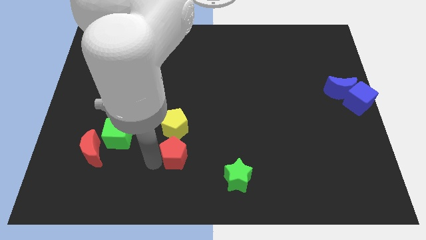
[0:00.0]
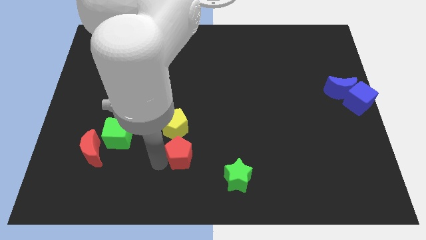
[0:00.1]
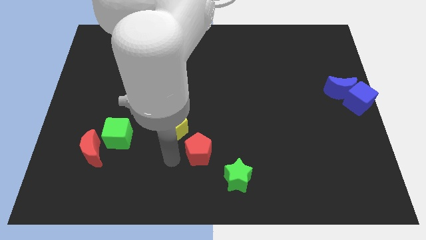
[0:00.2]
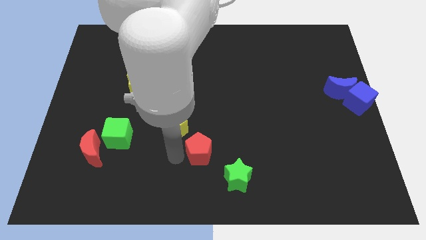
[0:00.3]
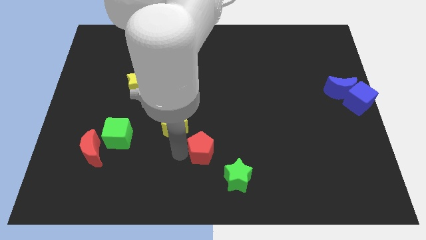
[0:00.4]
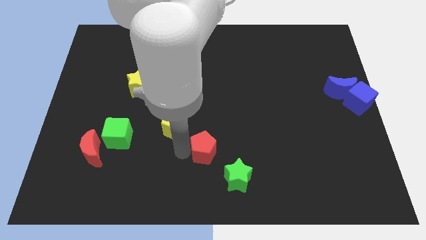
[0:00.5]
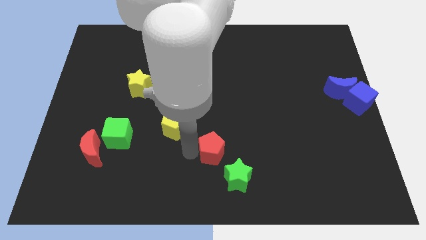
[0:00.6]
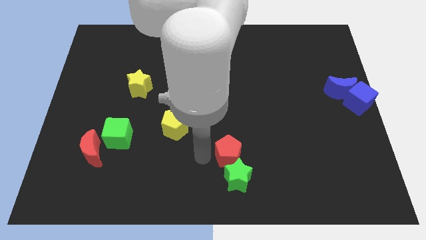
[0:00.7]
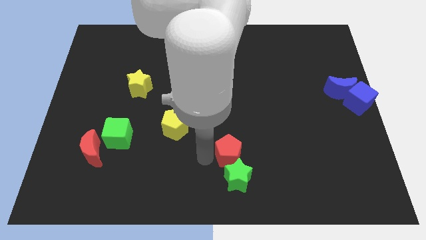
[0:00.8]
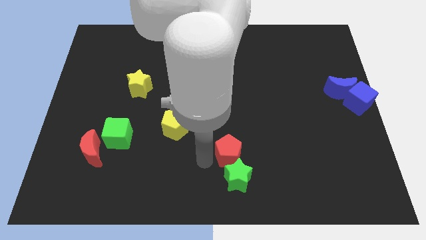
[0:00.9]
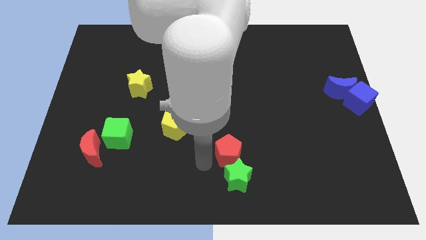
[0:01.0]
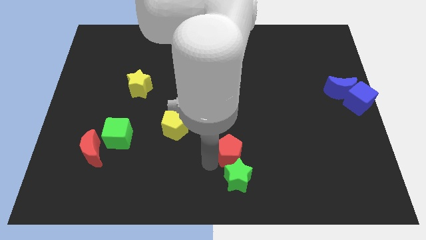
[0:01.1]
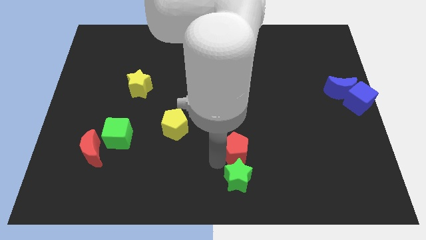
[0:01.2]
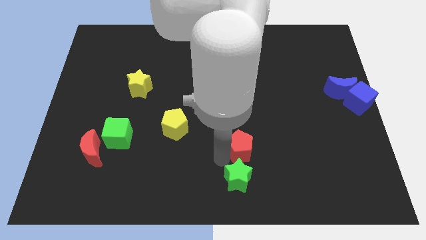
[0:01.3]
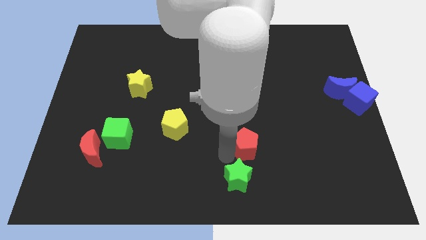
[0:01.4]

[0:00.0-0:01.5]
place the red pentagon to the top side of the green star

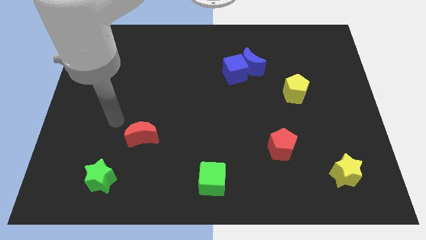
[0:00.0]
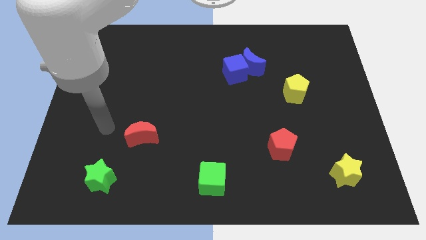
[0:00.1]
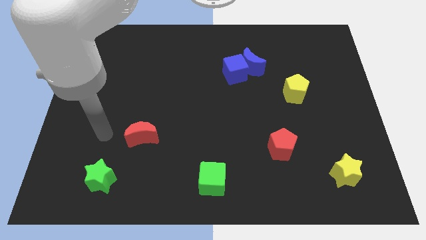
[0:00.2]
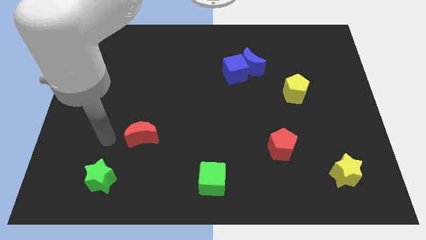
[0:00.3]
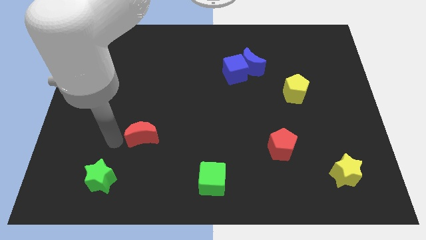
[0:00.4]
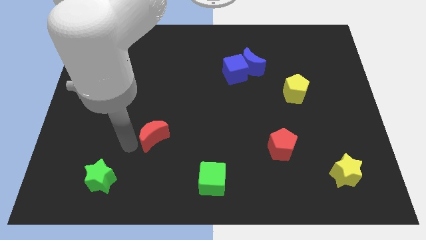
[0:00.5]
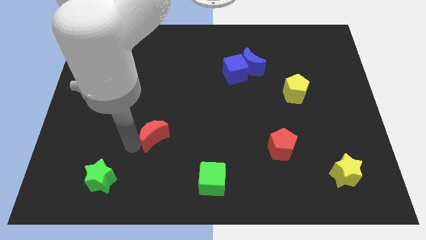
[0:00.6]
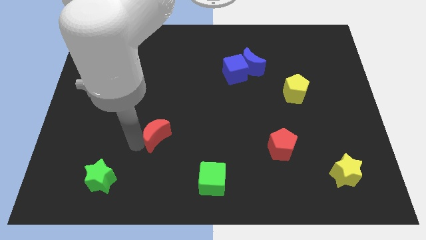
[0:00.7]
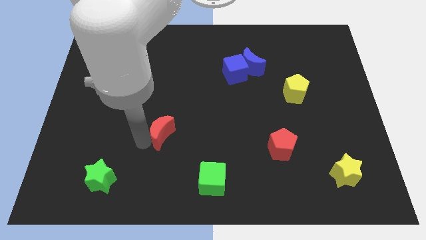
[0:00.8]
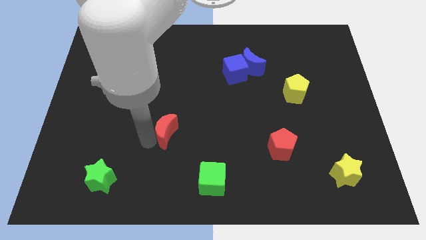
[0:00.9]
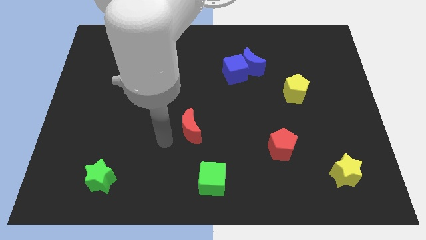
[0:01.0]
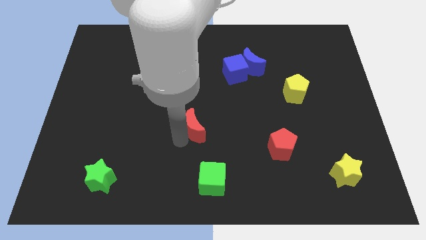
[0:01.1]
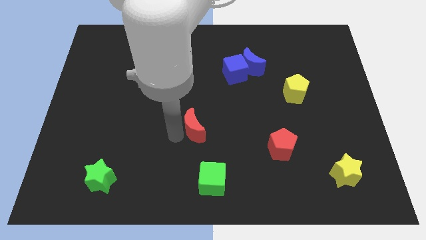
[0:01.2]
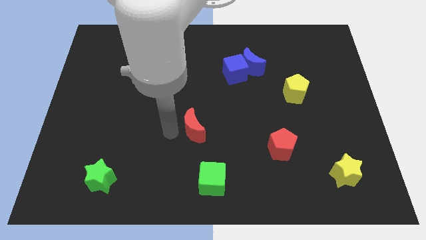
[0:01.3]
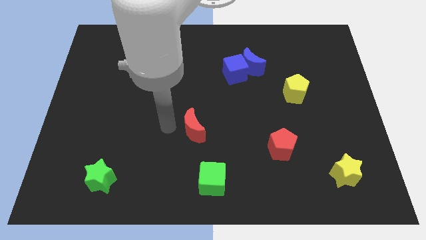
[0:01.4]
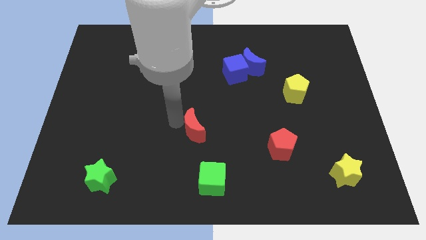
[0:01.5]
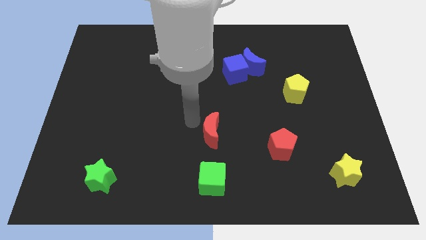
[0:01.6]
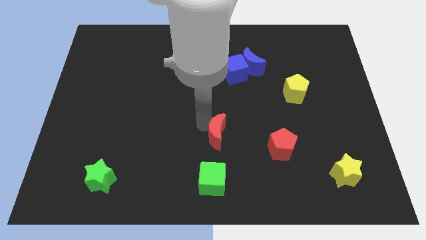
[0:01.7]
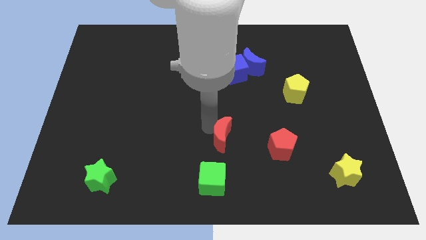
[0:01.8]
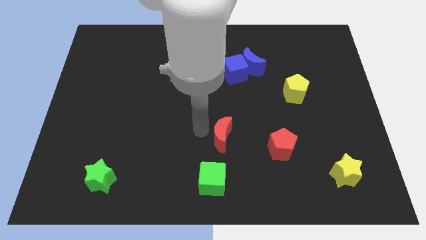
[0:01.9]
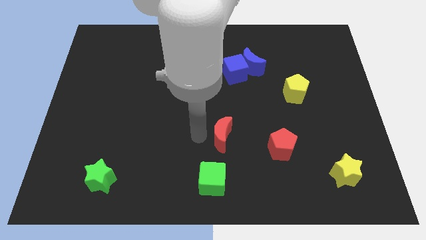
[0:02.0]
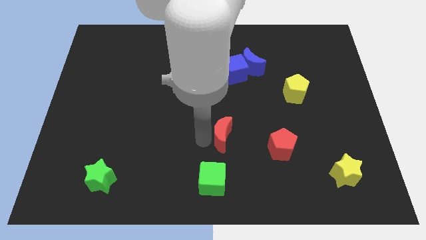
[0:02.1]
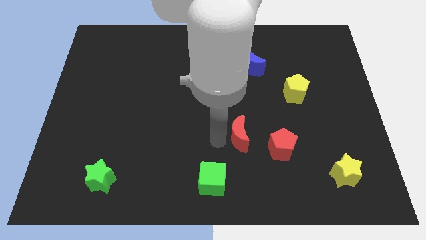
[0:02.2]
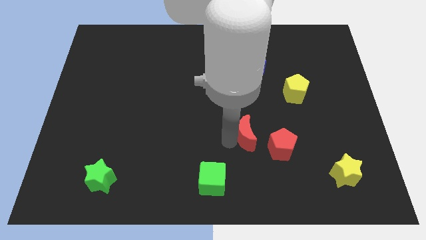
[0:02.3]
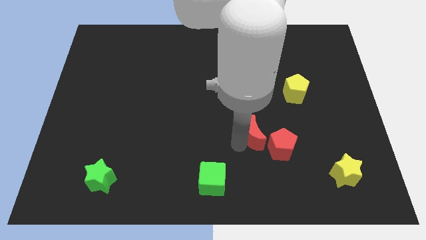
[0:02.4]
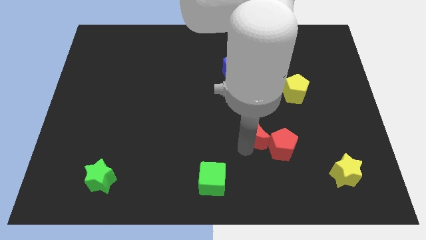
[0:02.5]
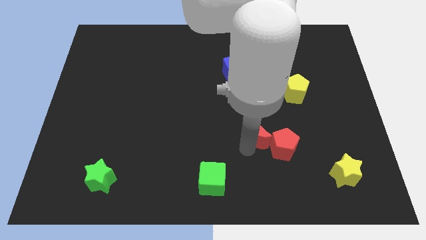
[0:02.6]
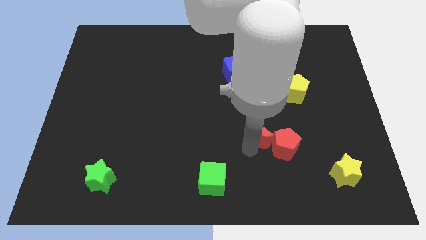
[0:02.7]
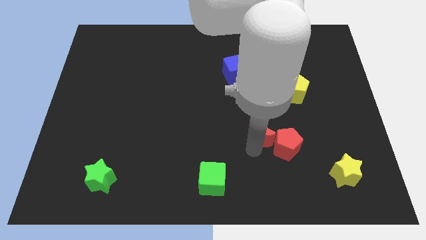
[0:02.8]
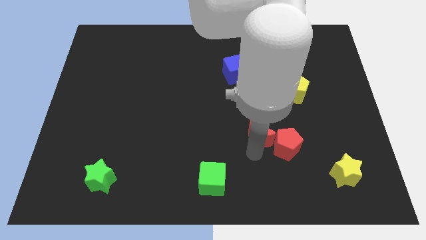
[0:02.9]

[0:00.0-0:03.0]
move the red crescent into the red pentagon

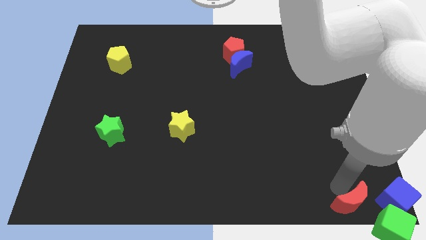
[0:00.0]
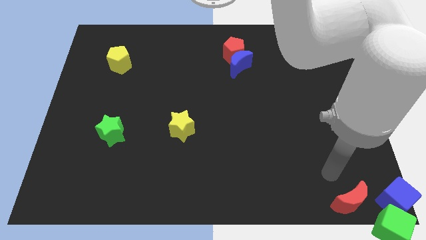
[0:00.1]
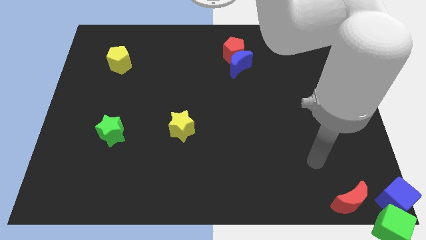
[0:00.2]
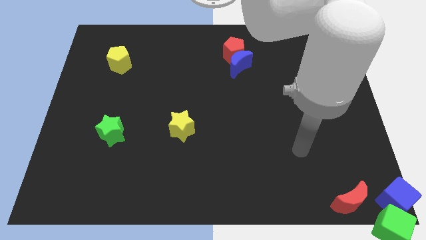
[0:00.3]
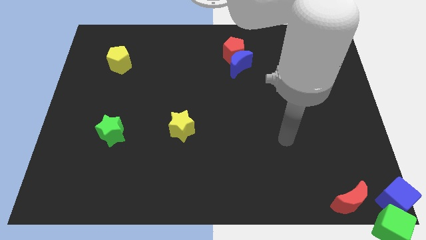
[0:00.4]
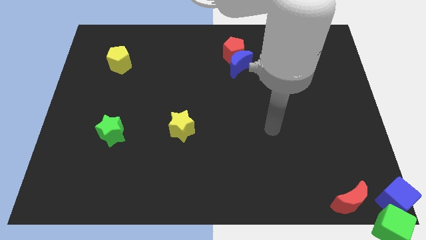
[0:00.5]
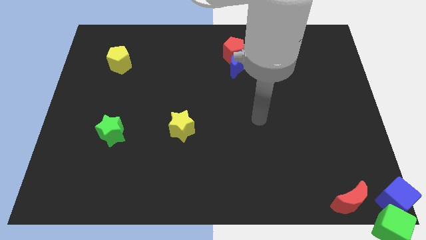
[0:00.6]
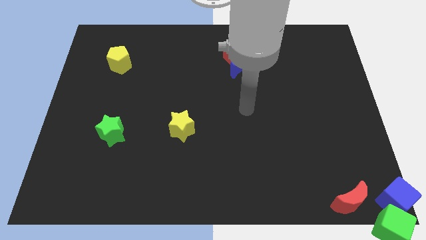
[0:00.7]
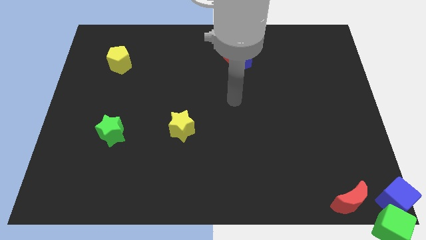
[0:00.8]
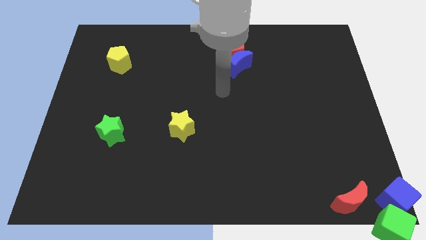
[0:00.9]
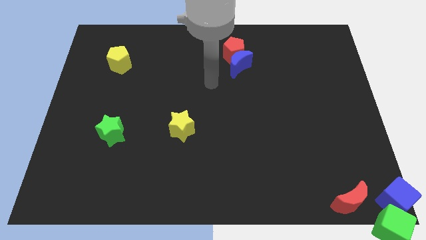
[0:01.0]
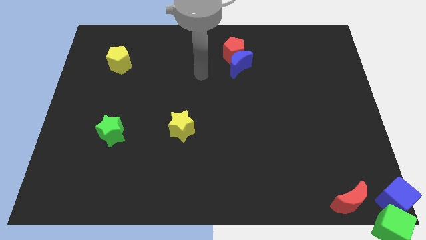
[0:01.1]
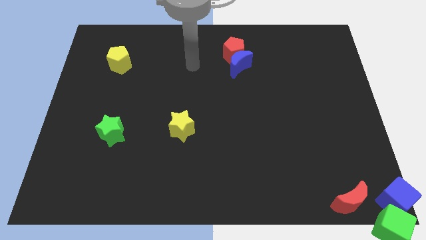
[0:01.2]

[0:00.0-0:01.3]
go away from the red moon

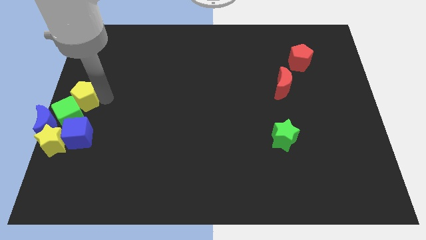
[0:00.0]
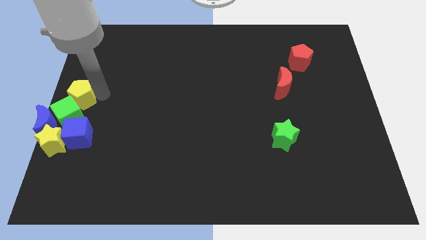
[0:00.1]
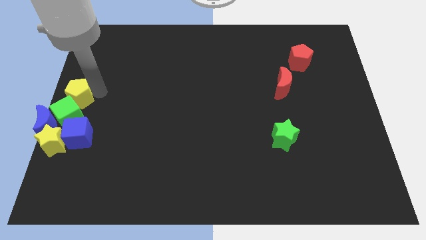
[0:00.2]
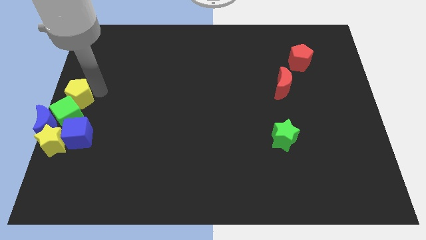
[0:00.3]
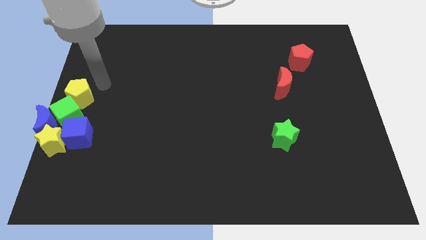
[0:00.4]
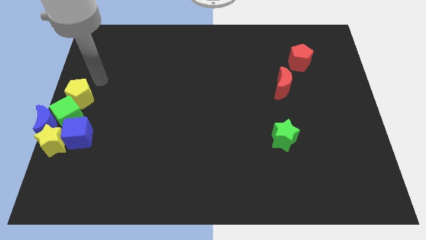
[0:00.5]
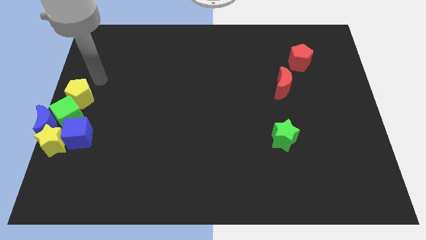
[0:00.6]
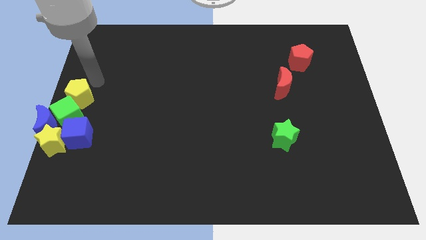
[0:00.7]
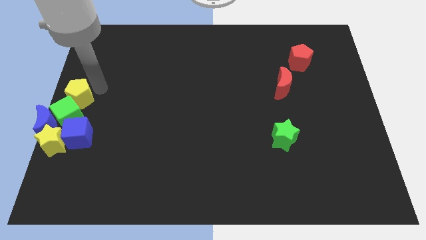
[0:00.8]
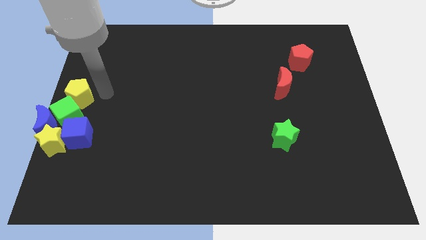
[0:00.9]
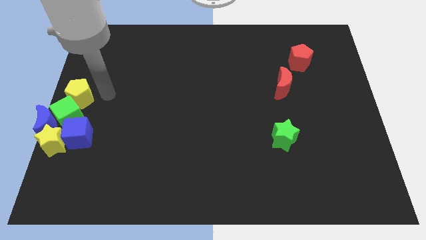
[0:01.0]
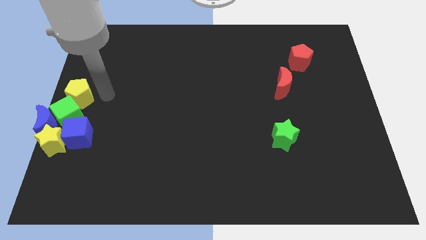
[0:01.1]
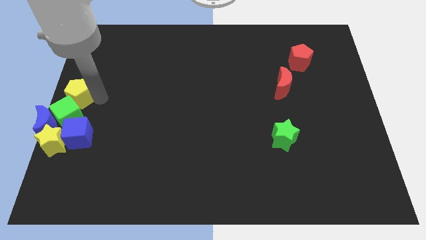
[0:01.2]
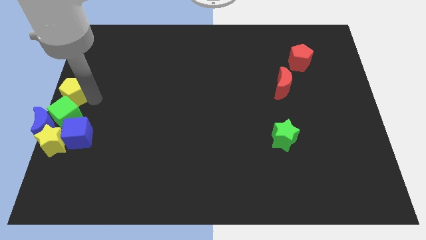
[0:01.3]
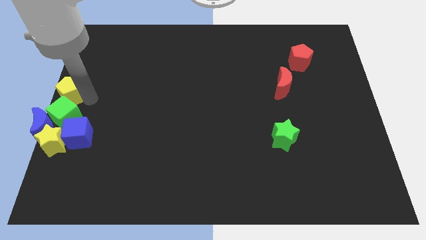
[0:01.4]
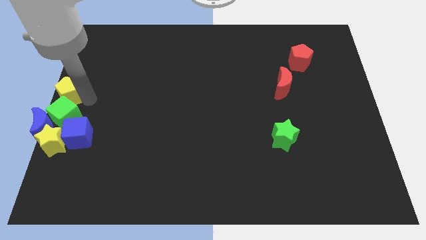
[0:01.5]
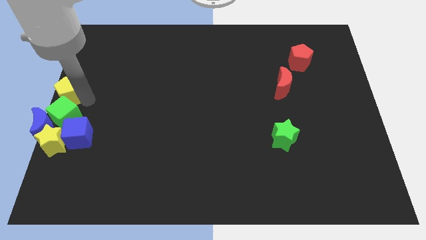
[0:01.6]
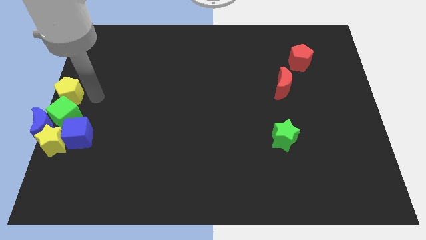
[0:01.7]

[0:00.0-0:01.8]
push the yellow pentagon vertically above the green cube

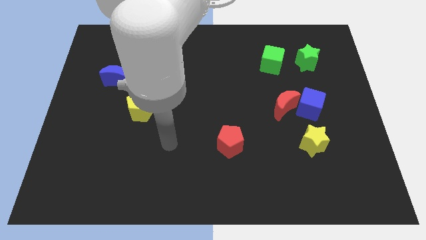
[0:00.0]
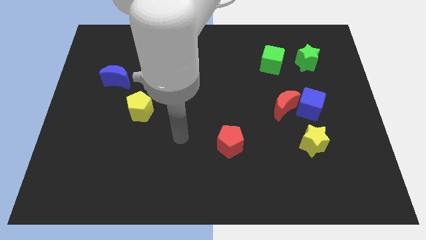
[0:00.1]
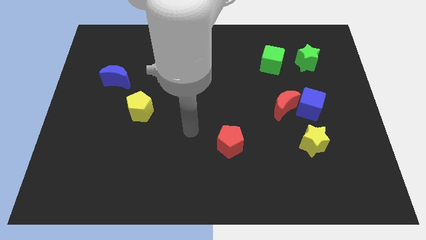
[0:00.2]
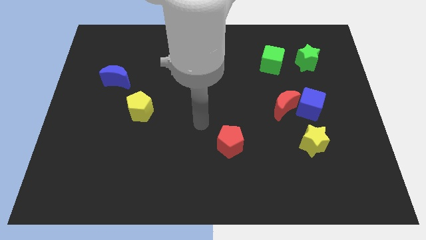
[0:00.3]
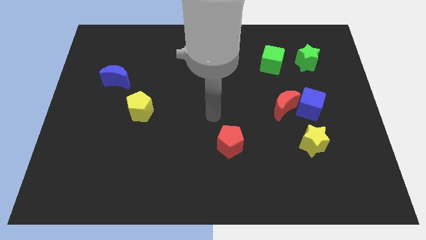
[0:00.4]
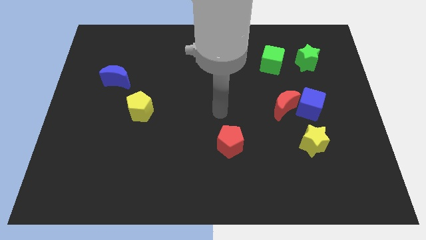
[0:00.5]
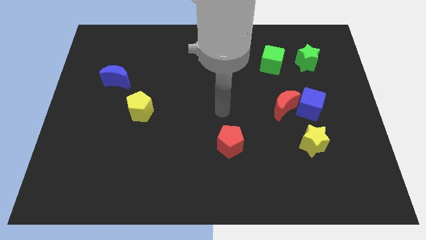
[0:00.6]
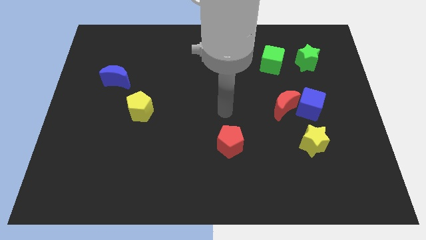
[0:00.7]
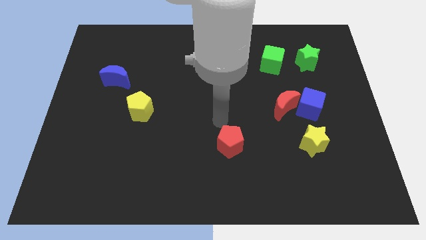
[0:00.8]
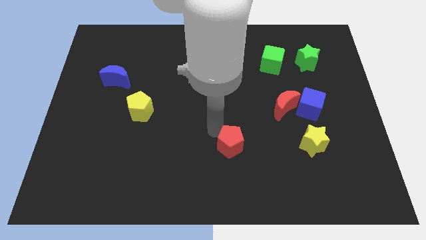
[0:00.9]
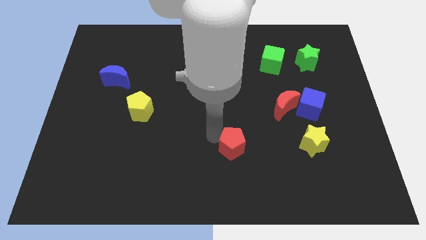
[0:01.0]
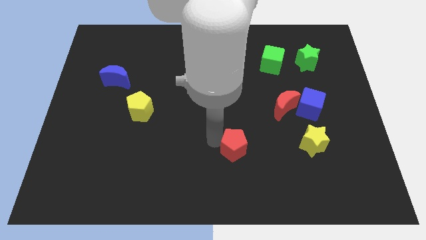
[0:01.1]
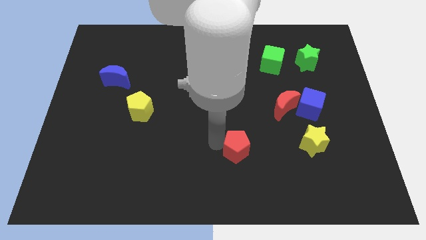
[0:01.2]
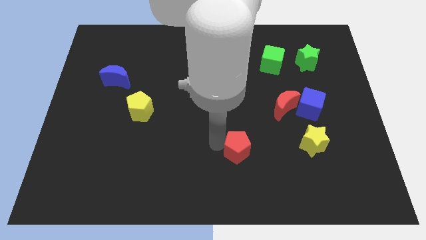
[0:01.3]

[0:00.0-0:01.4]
move your arm close to the red pentagon
